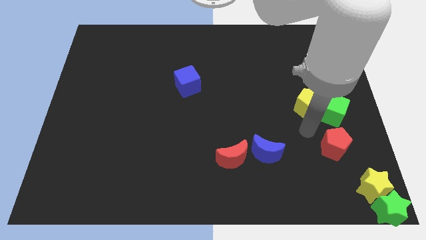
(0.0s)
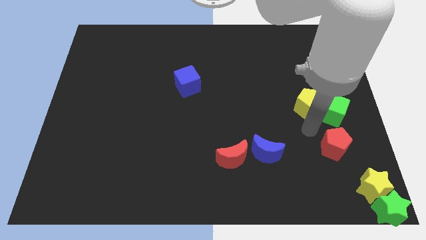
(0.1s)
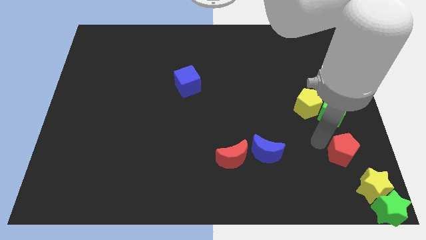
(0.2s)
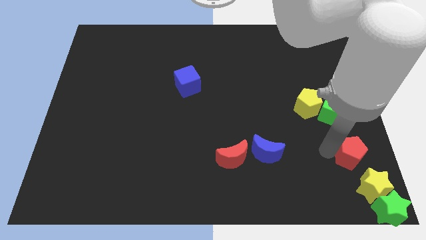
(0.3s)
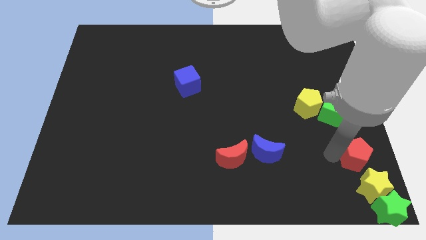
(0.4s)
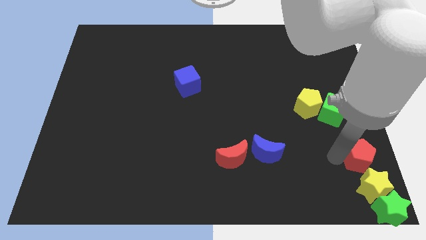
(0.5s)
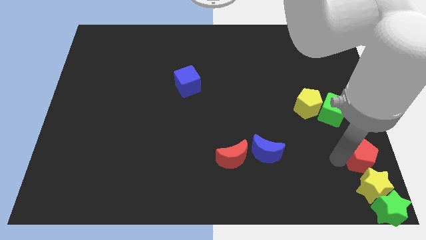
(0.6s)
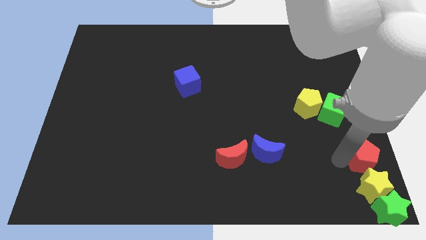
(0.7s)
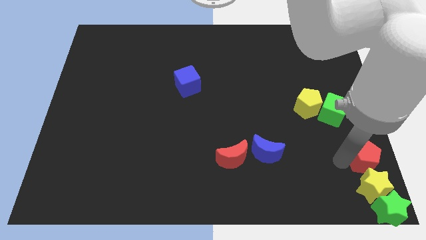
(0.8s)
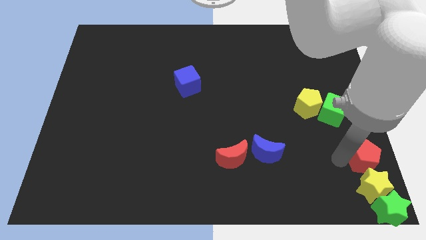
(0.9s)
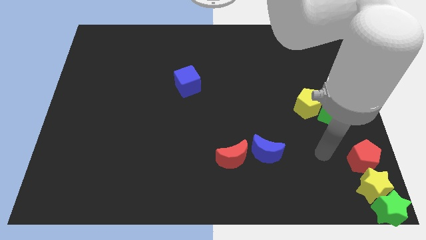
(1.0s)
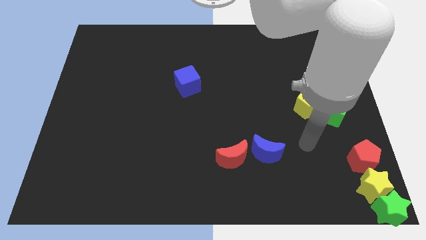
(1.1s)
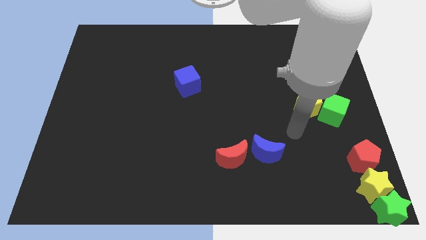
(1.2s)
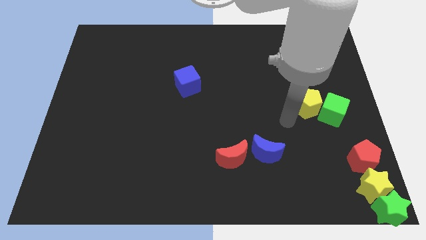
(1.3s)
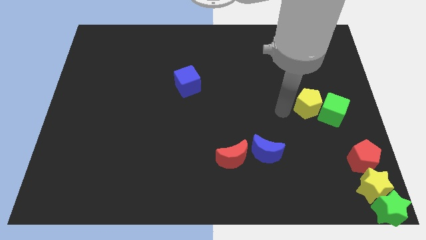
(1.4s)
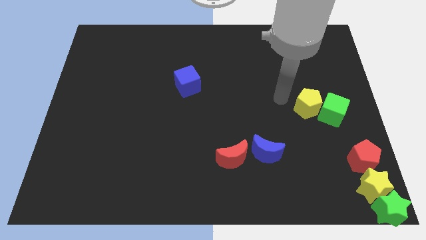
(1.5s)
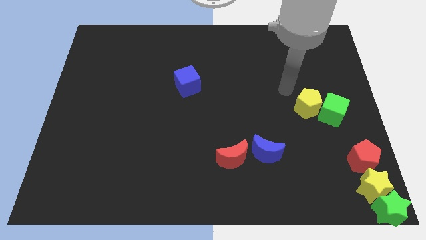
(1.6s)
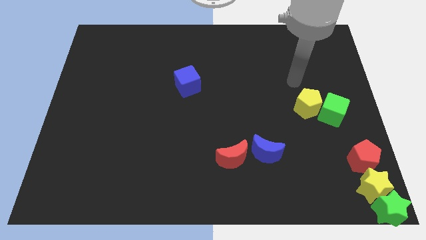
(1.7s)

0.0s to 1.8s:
move the red pentagon above the yellow star

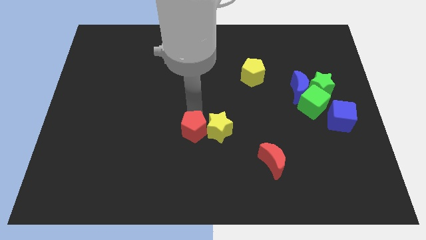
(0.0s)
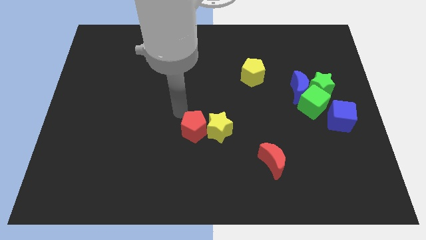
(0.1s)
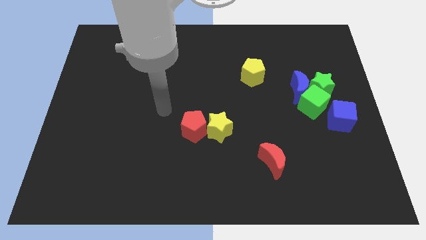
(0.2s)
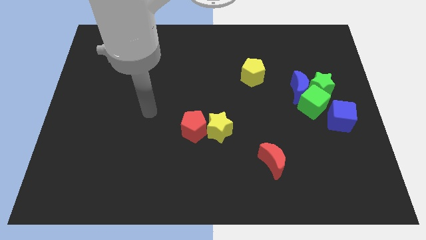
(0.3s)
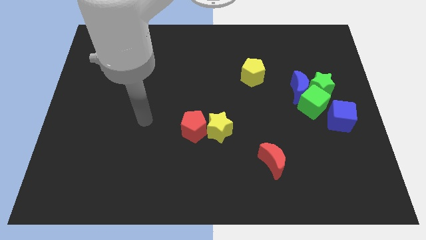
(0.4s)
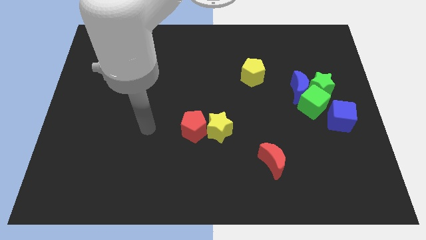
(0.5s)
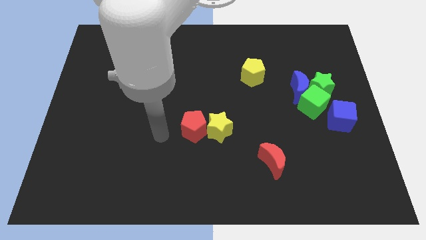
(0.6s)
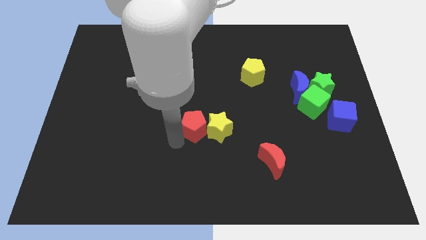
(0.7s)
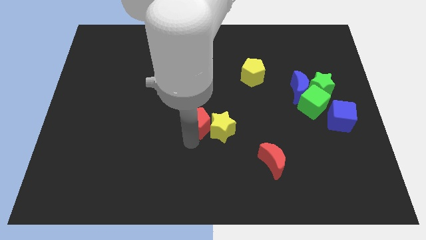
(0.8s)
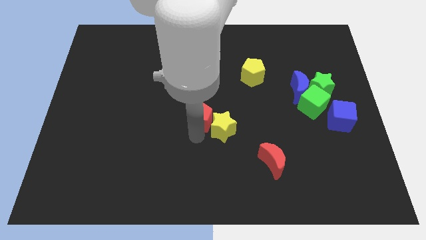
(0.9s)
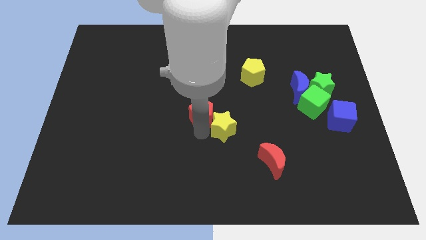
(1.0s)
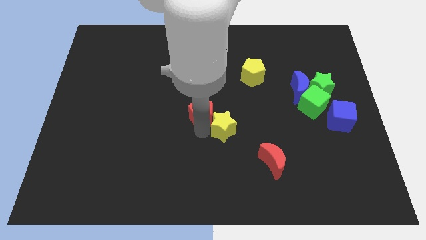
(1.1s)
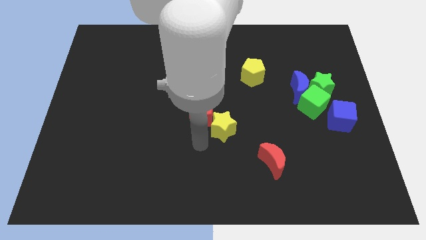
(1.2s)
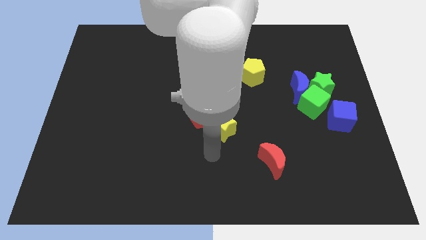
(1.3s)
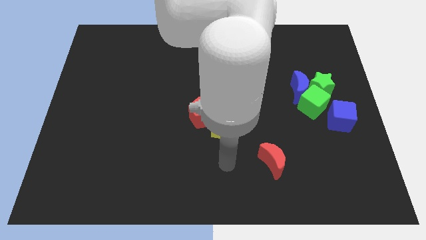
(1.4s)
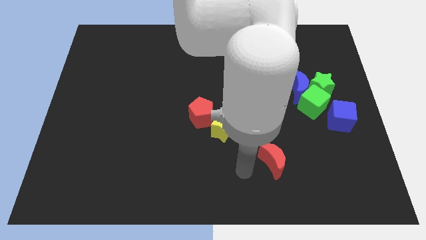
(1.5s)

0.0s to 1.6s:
move the red pentagon slightly up

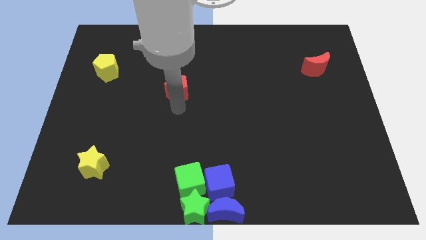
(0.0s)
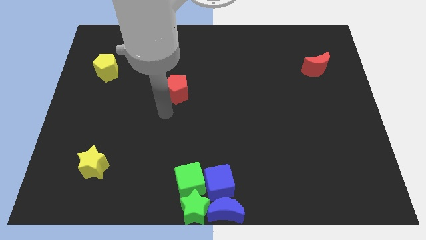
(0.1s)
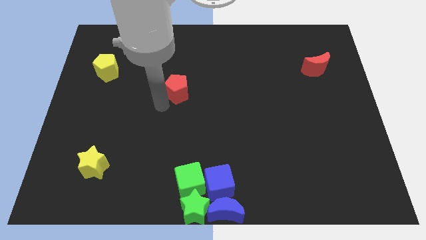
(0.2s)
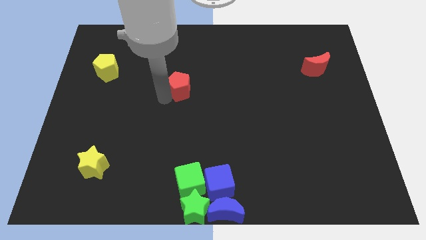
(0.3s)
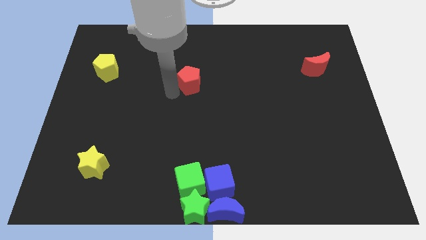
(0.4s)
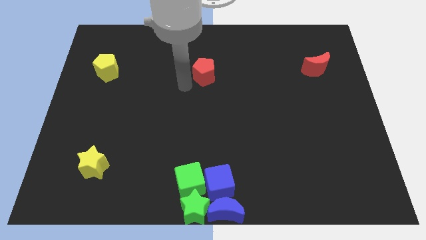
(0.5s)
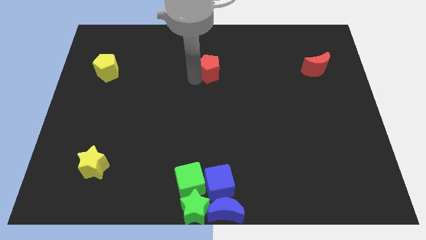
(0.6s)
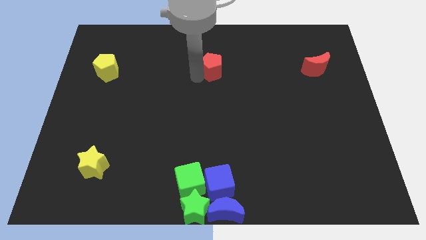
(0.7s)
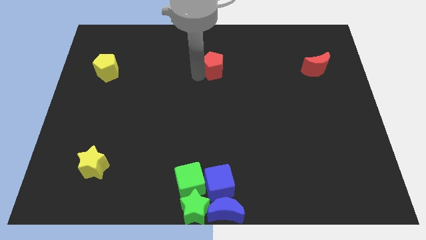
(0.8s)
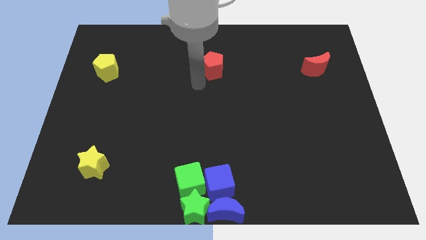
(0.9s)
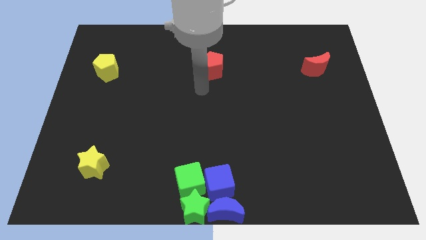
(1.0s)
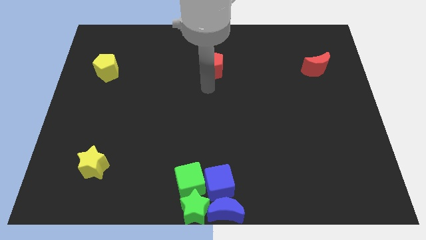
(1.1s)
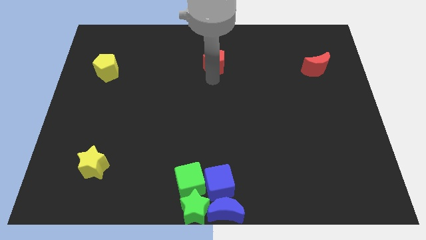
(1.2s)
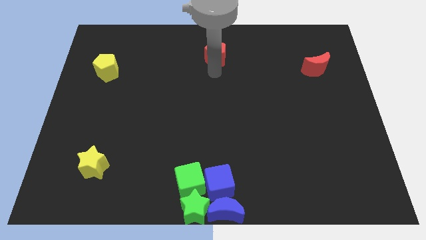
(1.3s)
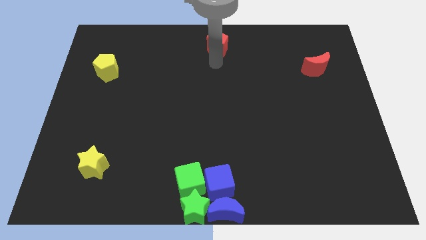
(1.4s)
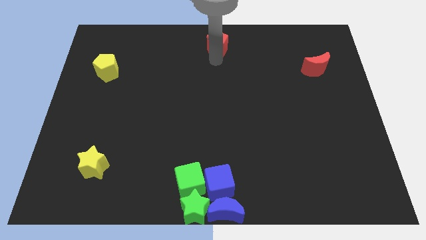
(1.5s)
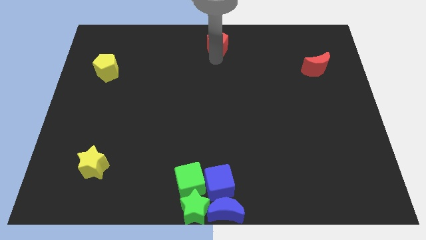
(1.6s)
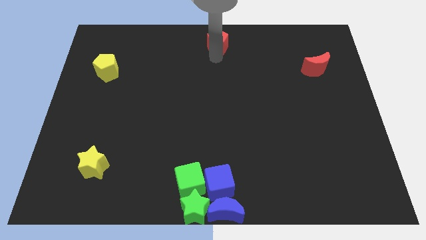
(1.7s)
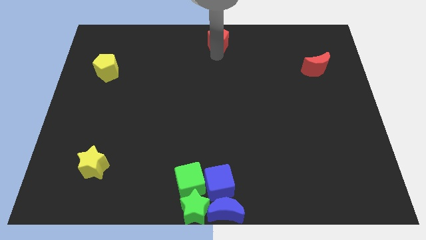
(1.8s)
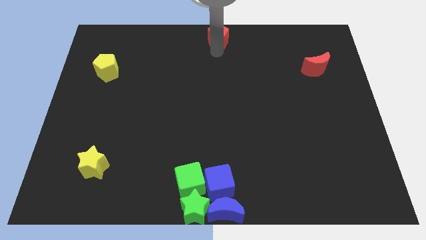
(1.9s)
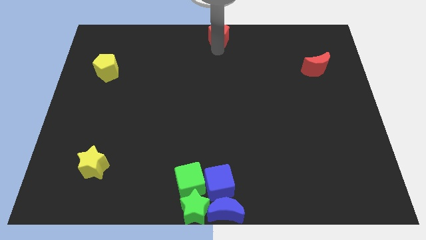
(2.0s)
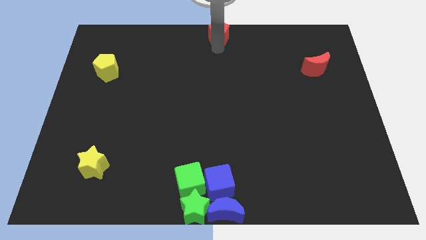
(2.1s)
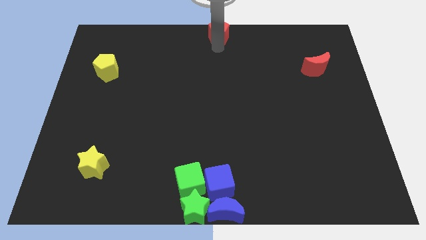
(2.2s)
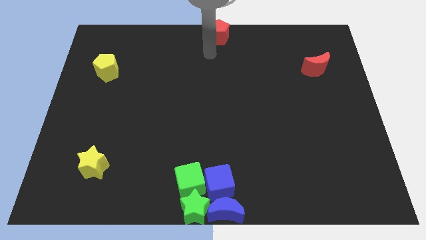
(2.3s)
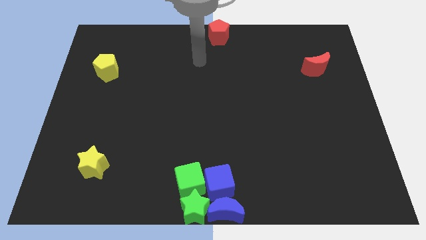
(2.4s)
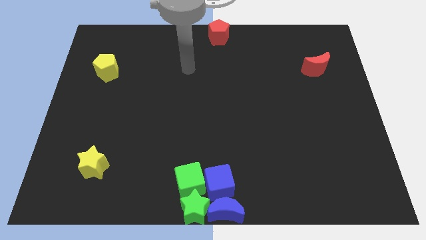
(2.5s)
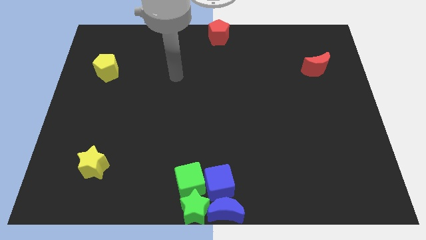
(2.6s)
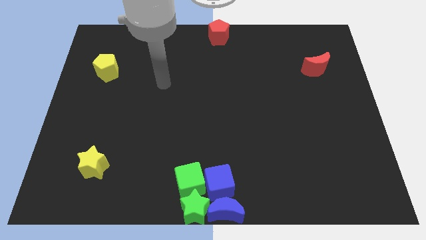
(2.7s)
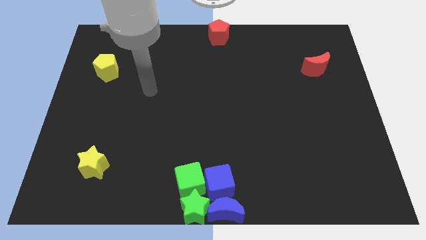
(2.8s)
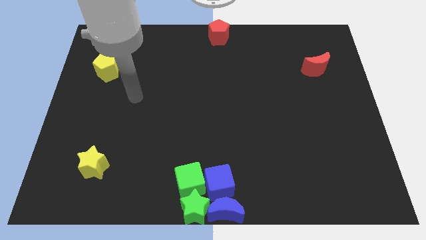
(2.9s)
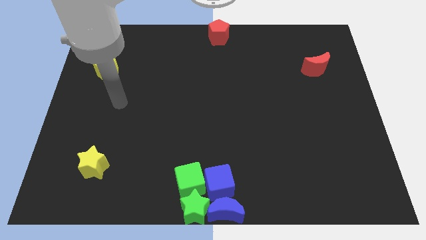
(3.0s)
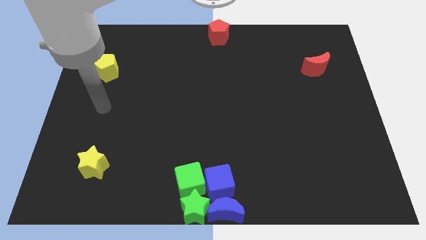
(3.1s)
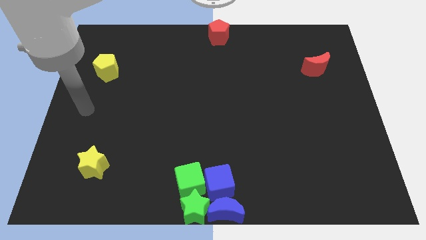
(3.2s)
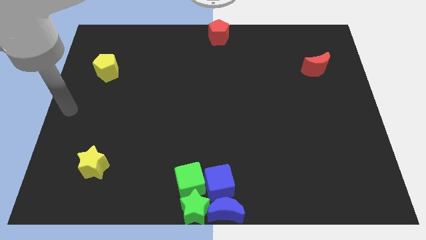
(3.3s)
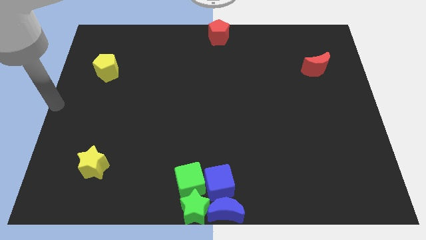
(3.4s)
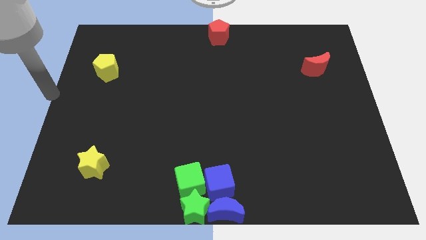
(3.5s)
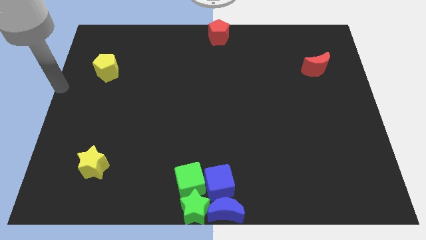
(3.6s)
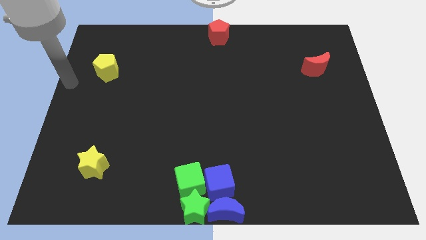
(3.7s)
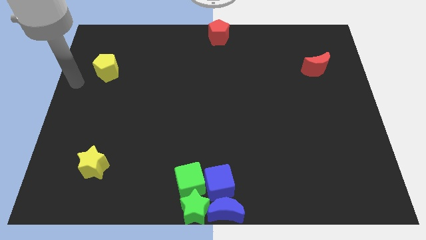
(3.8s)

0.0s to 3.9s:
place the red pentagon at the top center of the board

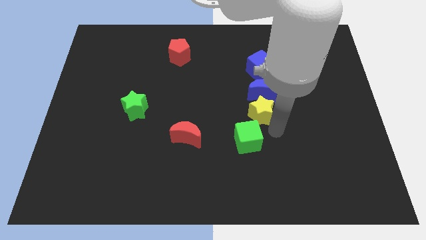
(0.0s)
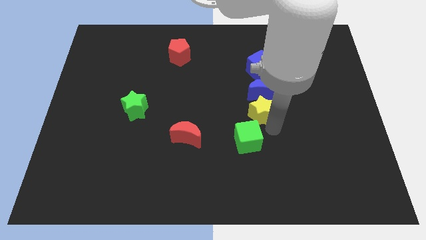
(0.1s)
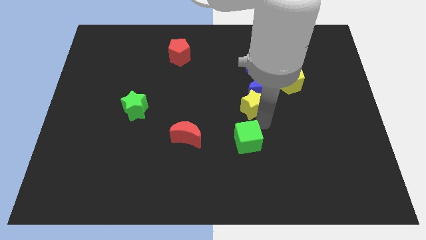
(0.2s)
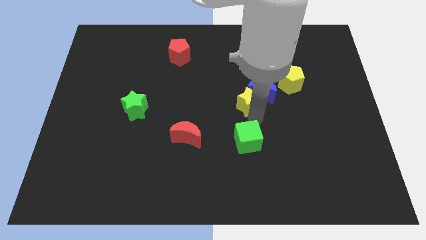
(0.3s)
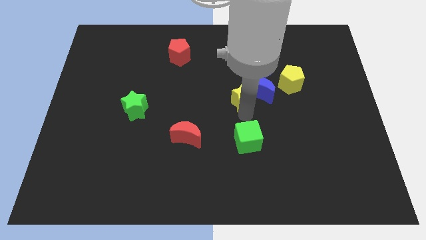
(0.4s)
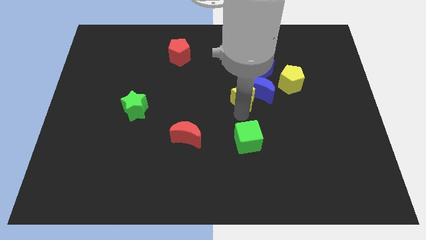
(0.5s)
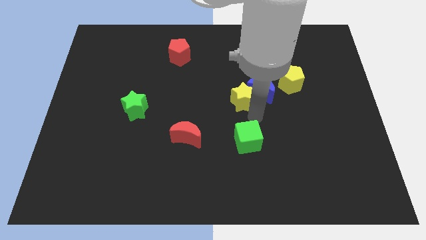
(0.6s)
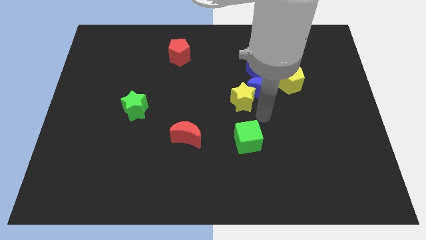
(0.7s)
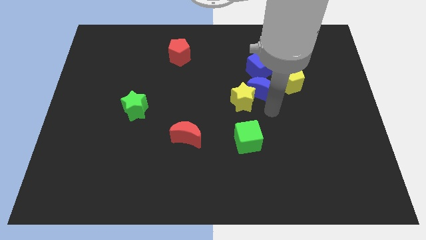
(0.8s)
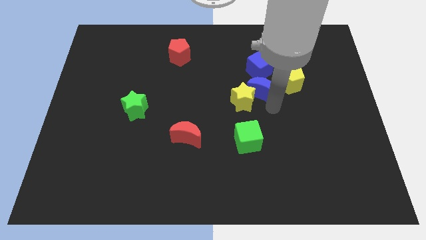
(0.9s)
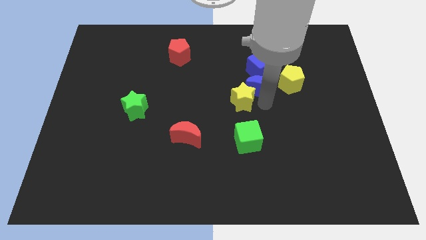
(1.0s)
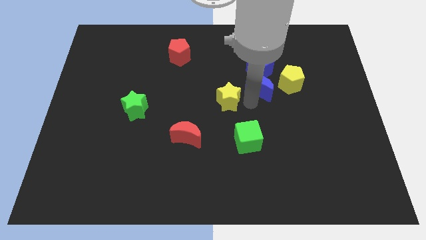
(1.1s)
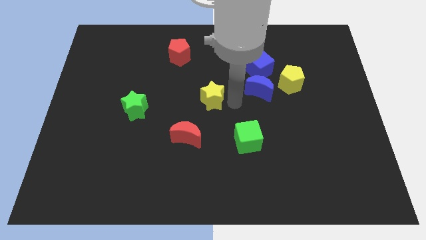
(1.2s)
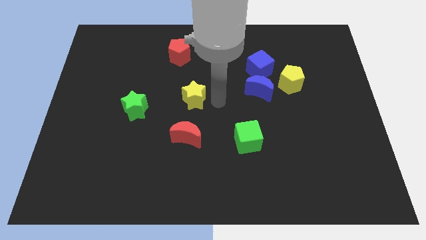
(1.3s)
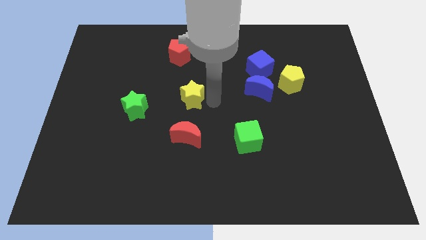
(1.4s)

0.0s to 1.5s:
place the yellow star above the red crescent
